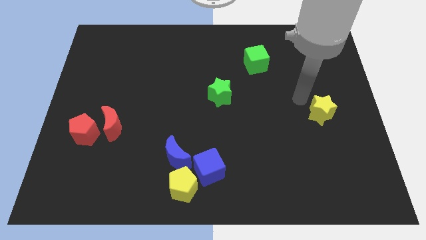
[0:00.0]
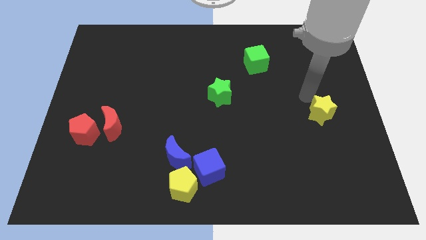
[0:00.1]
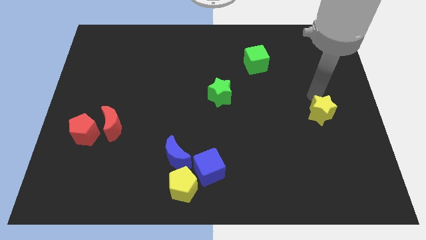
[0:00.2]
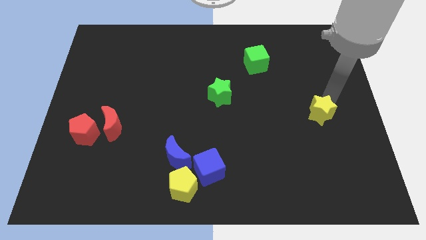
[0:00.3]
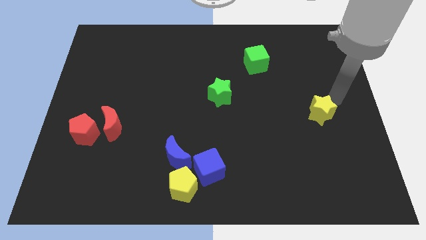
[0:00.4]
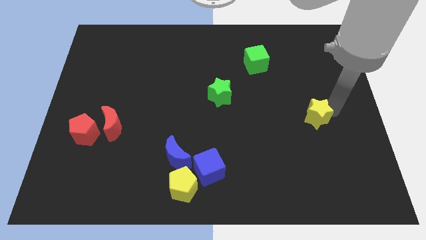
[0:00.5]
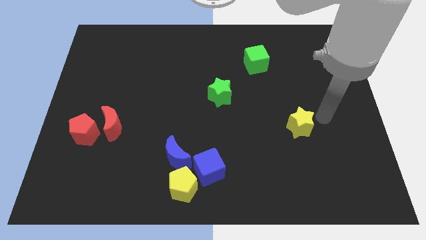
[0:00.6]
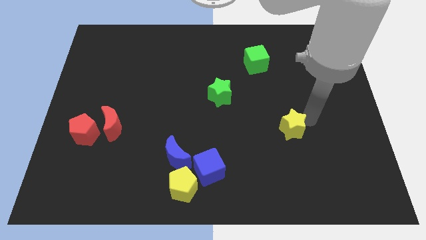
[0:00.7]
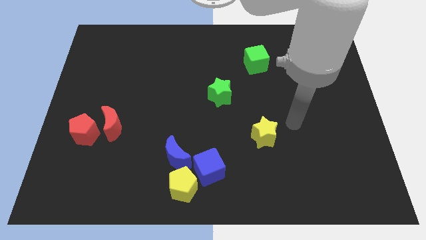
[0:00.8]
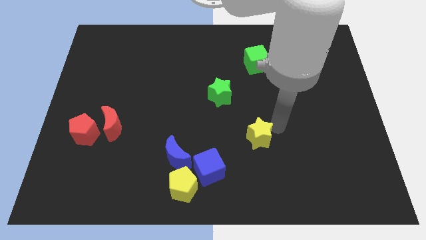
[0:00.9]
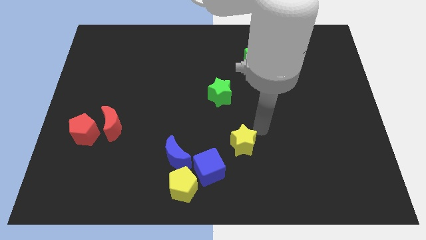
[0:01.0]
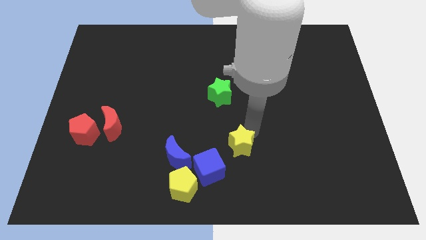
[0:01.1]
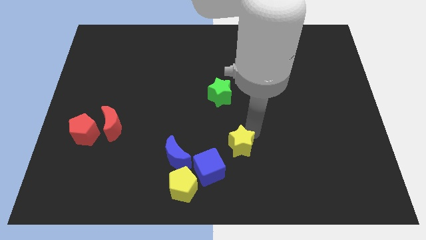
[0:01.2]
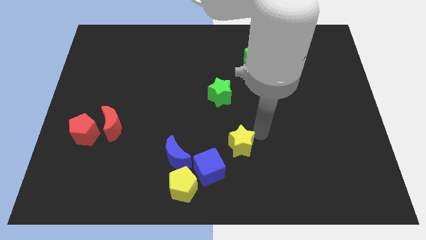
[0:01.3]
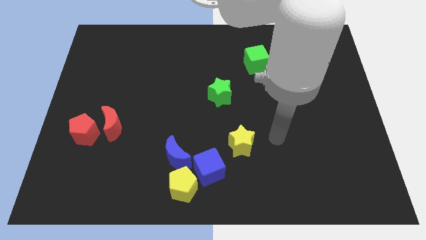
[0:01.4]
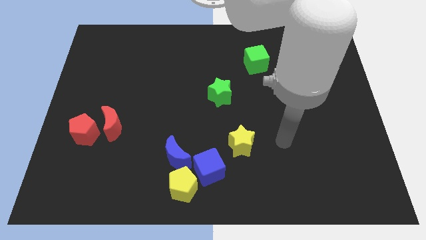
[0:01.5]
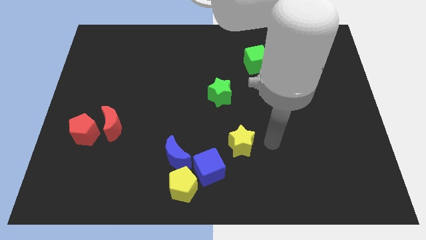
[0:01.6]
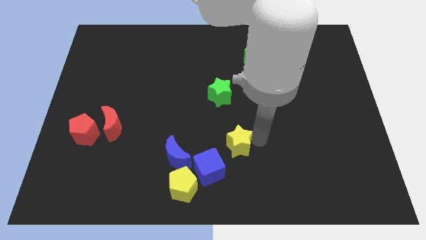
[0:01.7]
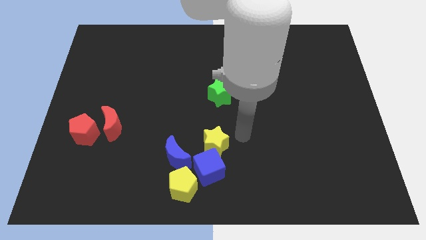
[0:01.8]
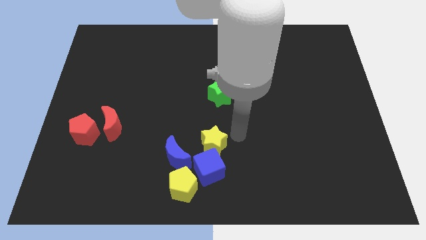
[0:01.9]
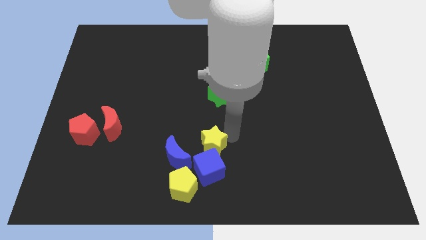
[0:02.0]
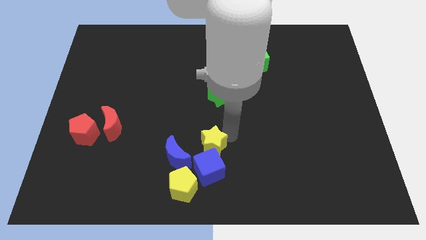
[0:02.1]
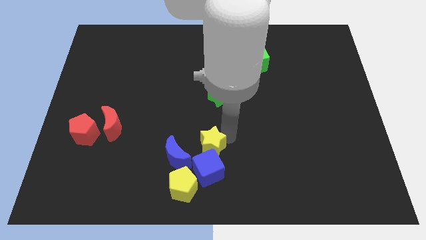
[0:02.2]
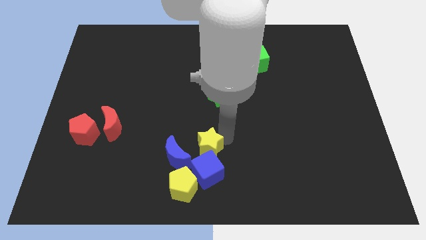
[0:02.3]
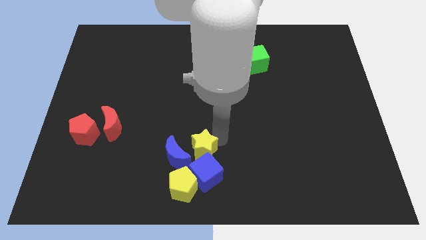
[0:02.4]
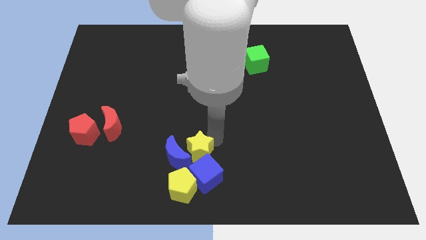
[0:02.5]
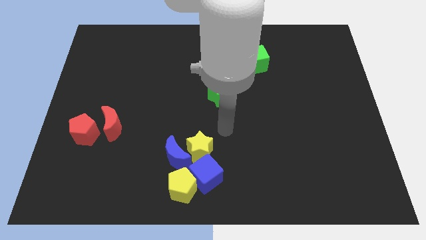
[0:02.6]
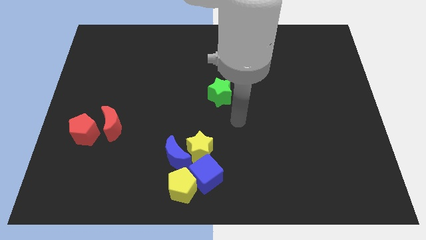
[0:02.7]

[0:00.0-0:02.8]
move the yellow star into the blue cube

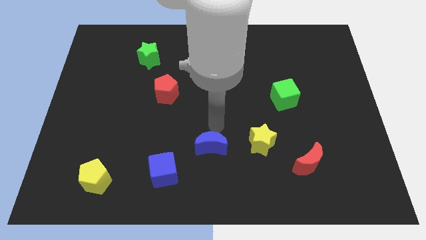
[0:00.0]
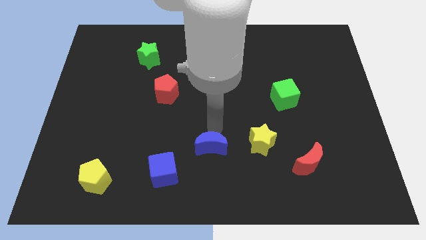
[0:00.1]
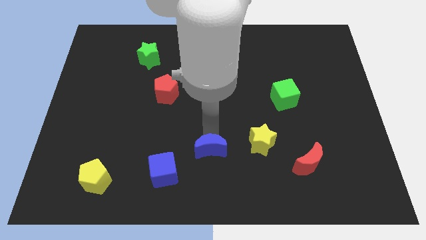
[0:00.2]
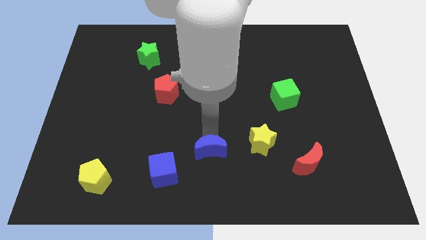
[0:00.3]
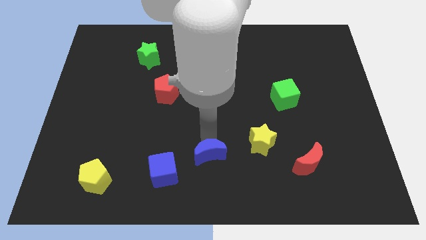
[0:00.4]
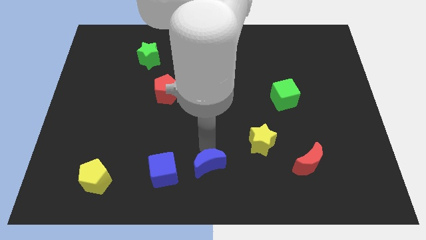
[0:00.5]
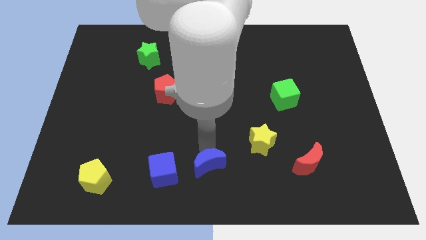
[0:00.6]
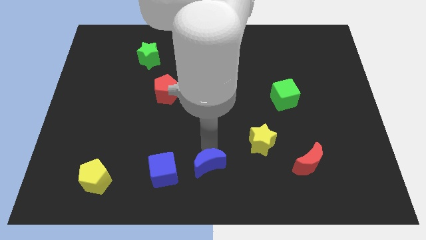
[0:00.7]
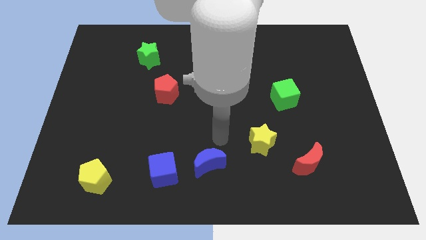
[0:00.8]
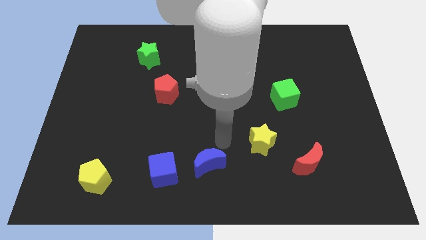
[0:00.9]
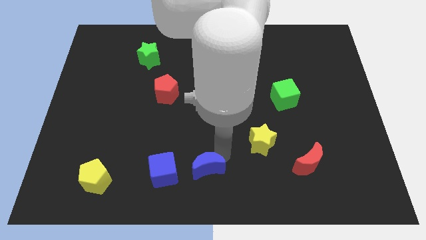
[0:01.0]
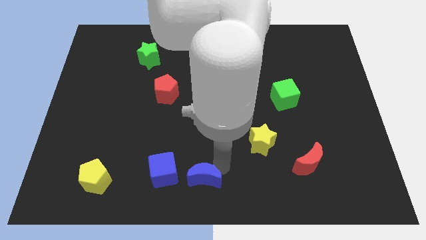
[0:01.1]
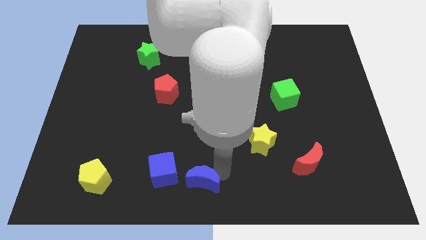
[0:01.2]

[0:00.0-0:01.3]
place the blue moon right to the blue cube

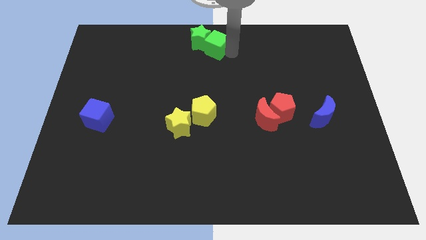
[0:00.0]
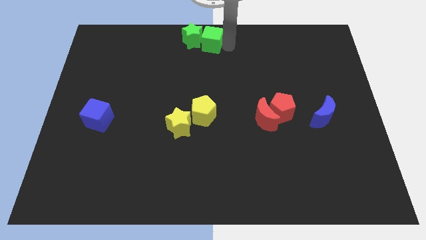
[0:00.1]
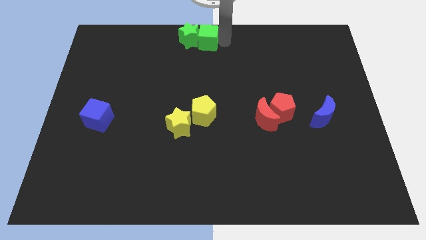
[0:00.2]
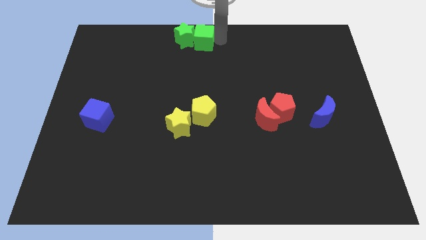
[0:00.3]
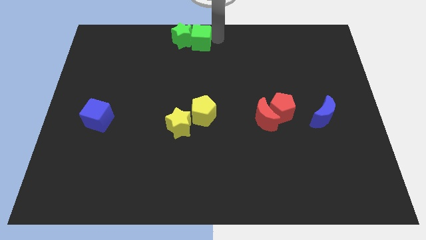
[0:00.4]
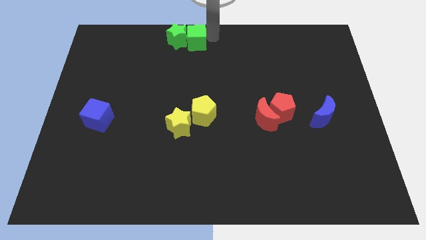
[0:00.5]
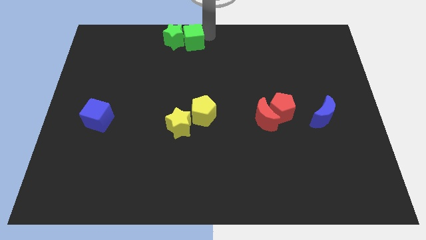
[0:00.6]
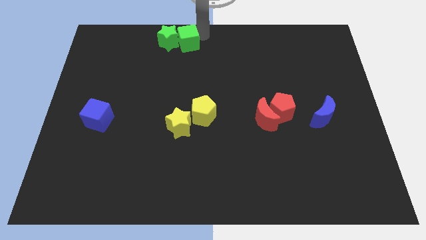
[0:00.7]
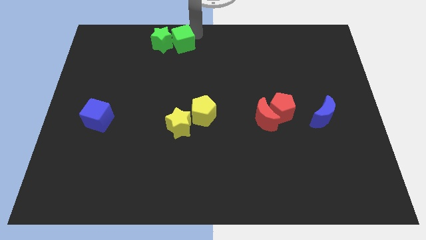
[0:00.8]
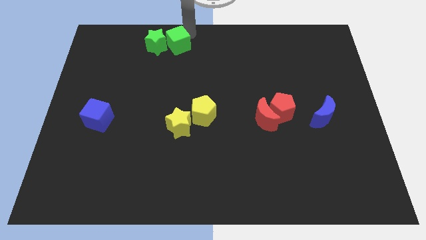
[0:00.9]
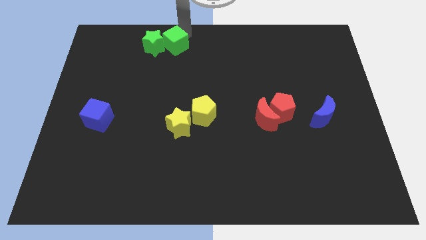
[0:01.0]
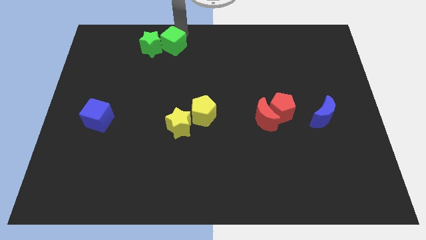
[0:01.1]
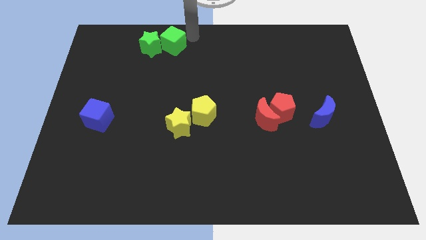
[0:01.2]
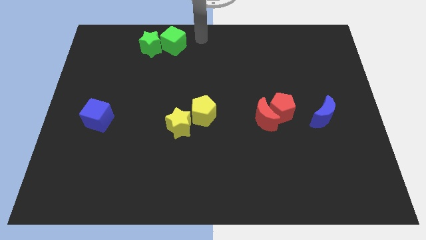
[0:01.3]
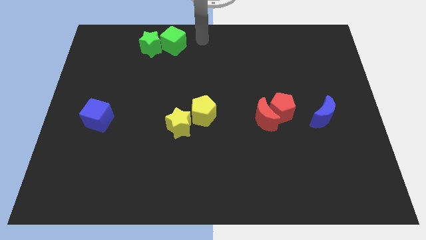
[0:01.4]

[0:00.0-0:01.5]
place the green cube to the right of green star

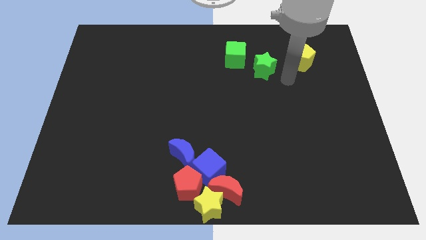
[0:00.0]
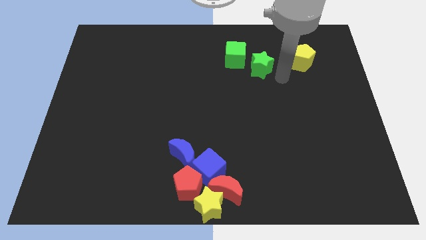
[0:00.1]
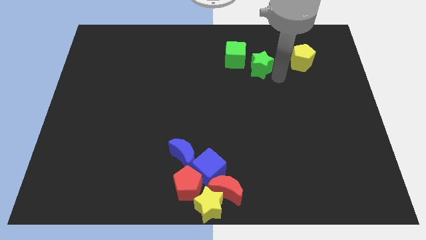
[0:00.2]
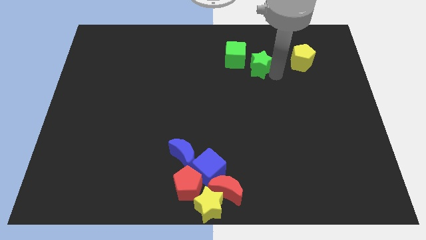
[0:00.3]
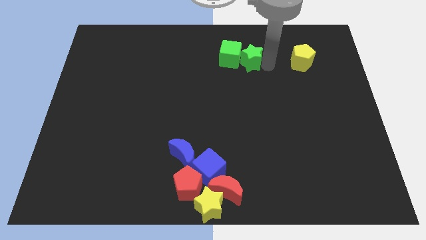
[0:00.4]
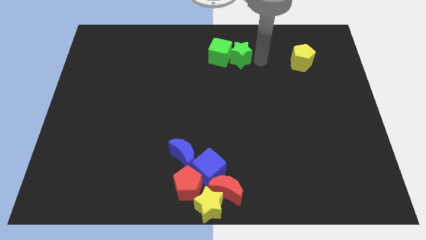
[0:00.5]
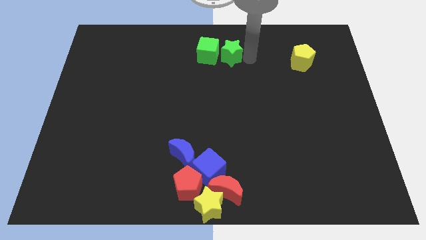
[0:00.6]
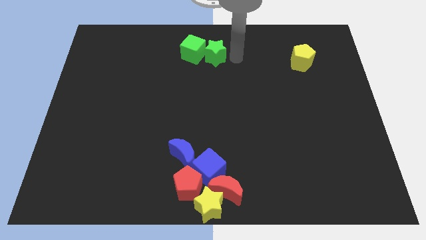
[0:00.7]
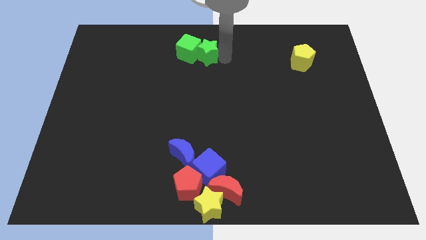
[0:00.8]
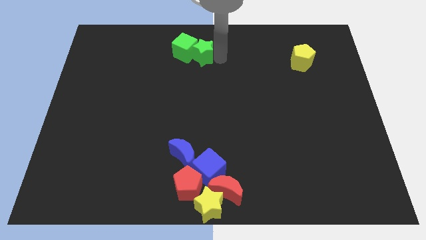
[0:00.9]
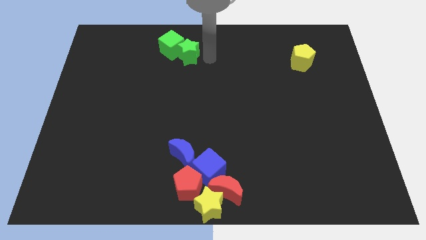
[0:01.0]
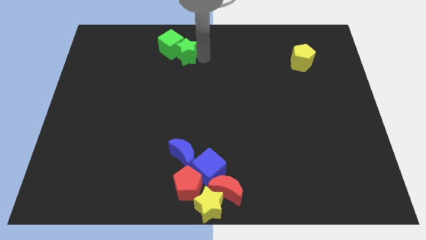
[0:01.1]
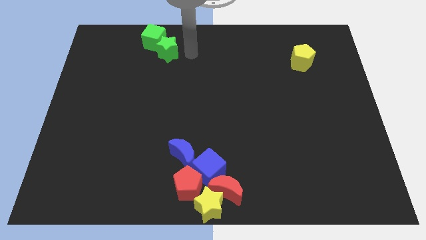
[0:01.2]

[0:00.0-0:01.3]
push the green star and green cube towards left

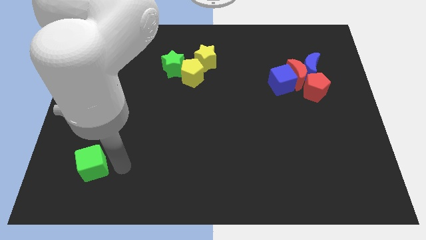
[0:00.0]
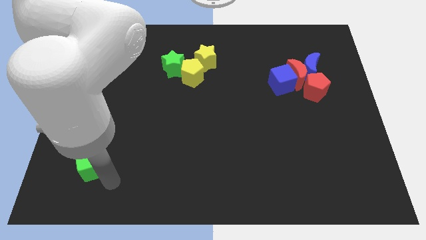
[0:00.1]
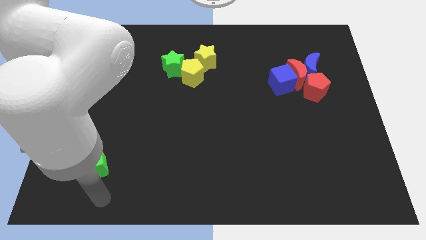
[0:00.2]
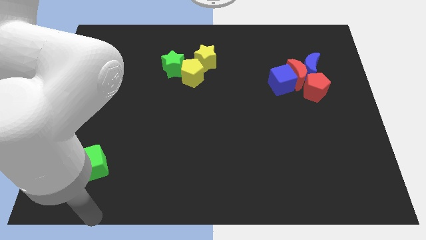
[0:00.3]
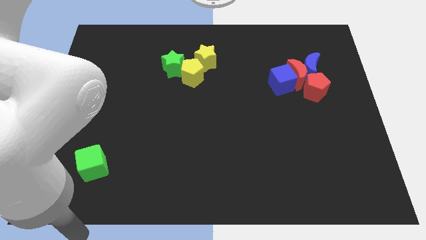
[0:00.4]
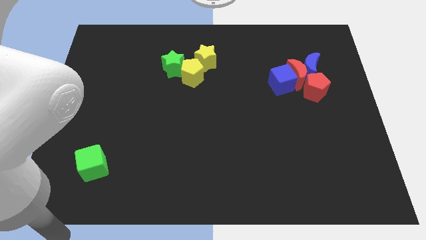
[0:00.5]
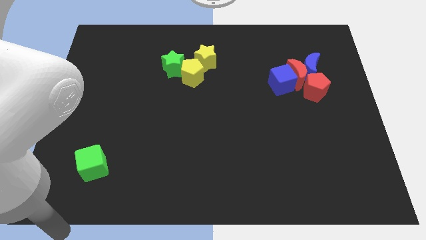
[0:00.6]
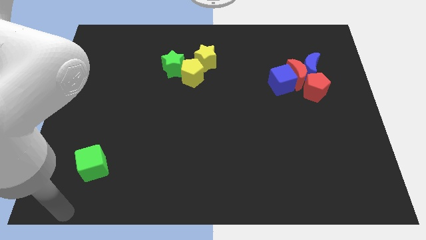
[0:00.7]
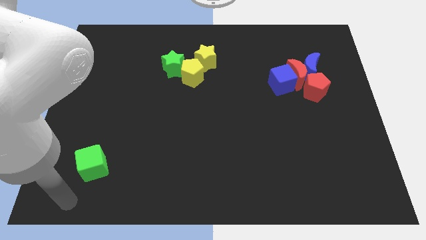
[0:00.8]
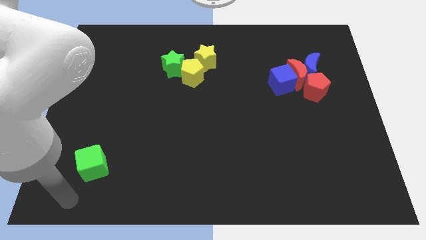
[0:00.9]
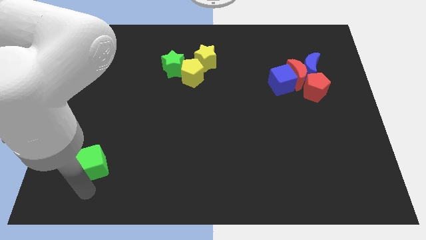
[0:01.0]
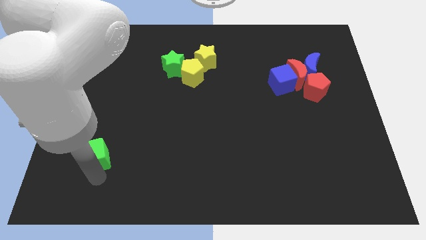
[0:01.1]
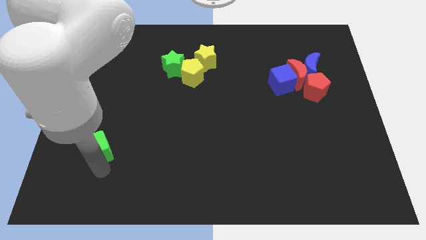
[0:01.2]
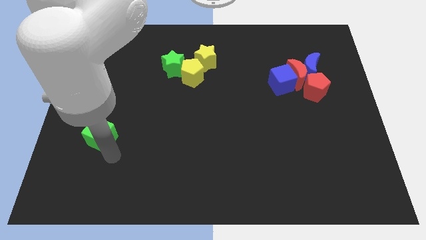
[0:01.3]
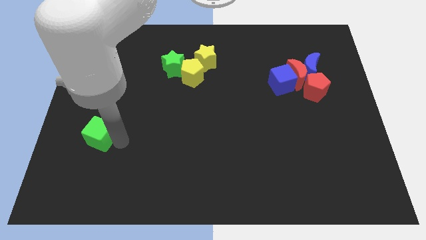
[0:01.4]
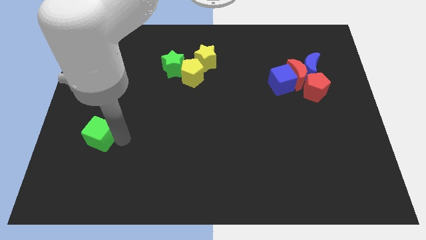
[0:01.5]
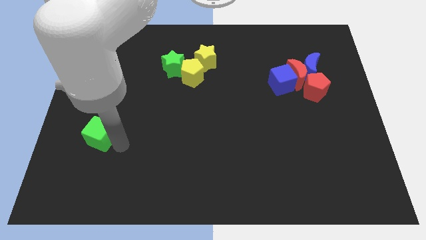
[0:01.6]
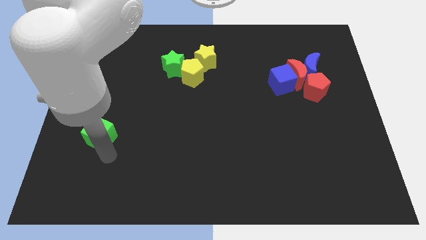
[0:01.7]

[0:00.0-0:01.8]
move the green cube slightly upwards

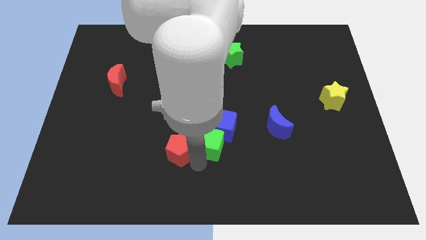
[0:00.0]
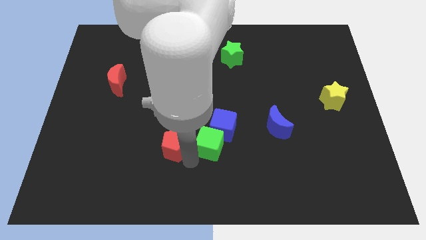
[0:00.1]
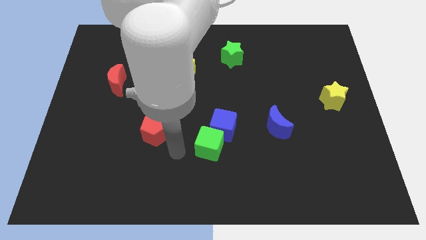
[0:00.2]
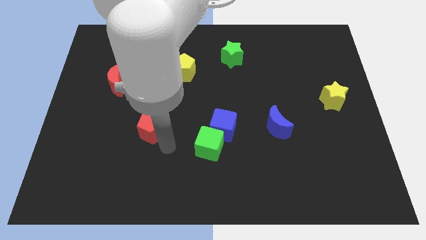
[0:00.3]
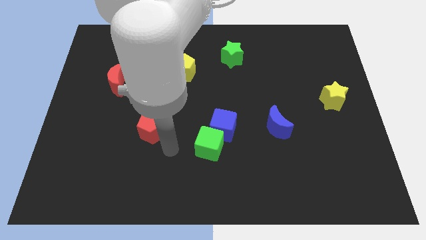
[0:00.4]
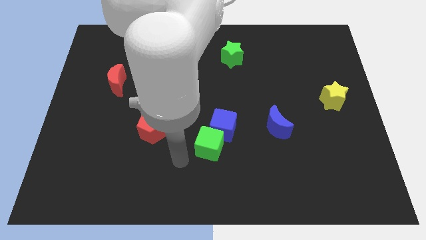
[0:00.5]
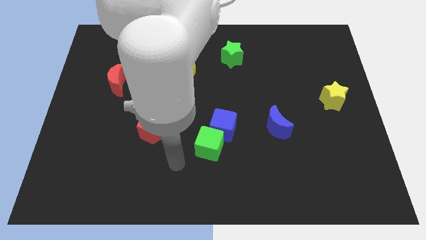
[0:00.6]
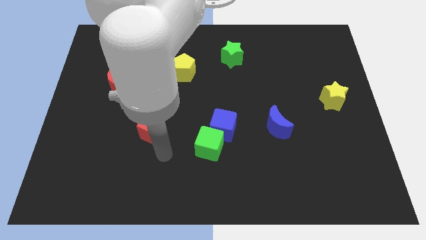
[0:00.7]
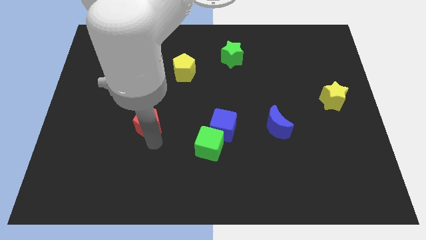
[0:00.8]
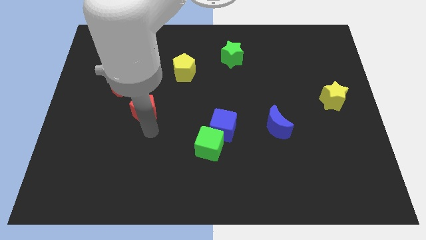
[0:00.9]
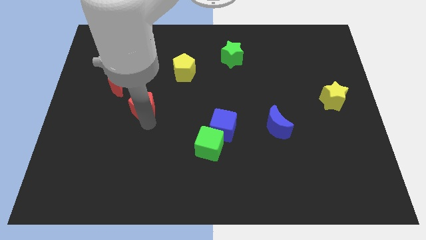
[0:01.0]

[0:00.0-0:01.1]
push red pentagon towards red crescent
